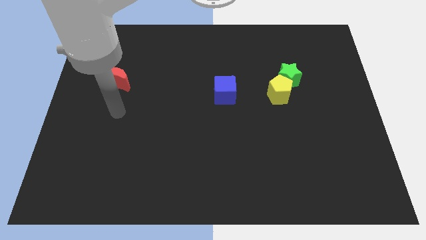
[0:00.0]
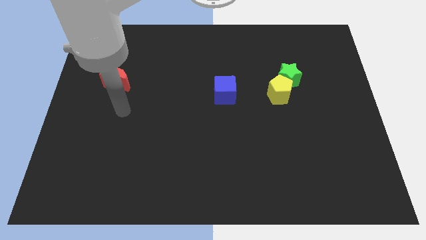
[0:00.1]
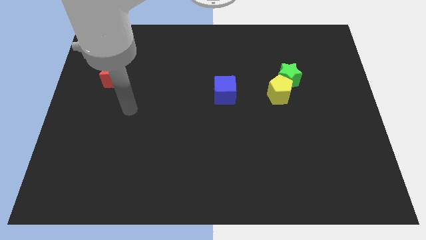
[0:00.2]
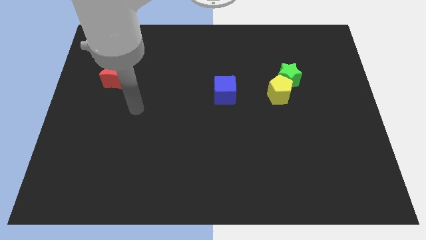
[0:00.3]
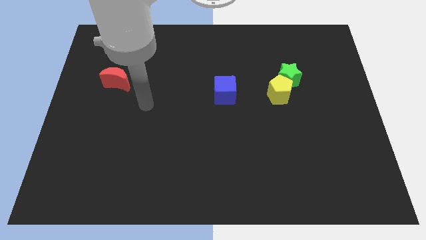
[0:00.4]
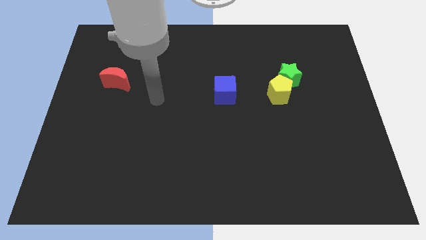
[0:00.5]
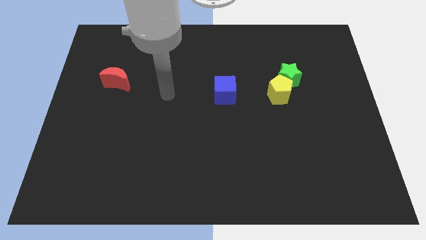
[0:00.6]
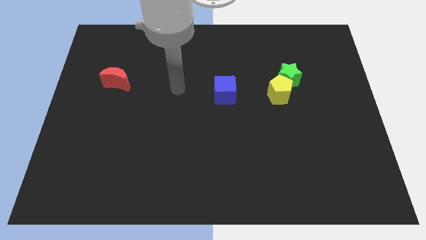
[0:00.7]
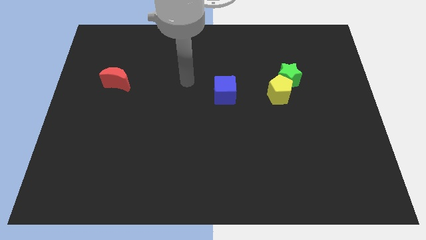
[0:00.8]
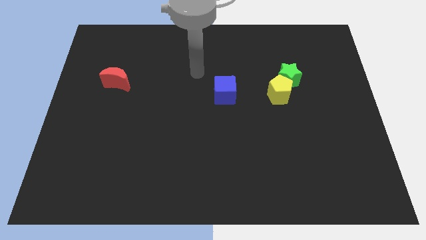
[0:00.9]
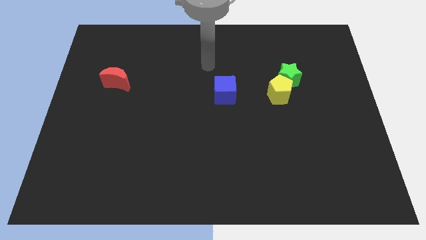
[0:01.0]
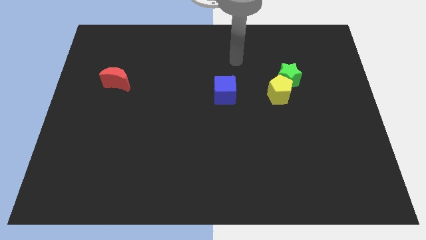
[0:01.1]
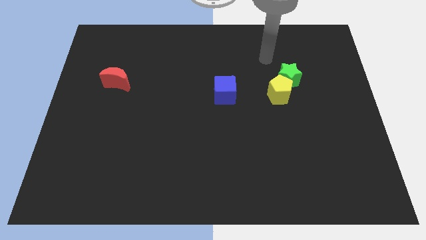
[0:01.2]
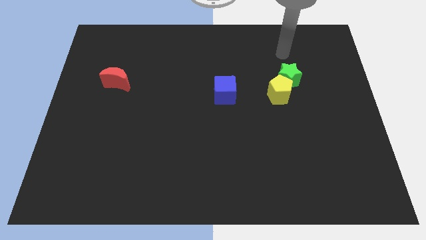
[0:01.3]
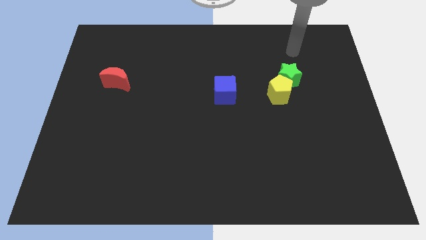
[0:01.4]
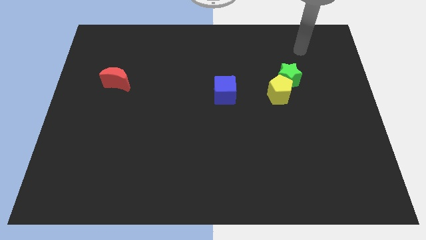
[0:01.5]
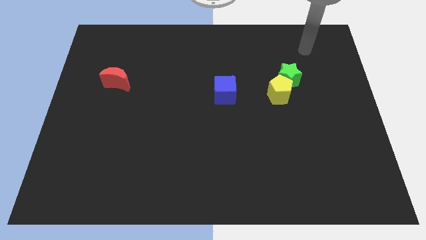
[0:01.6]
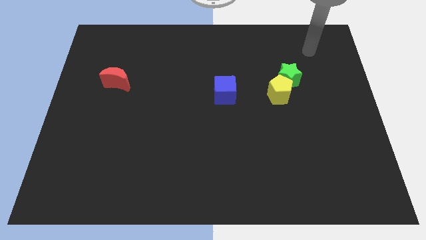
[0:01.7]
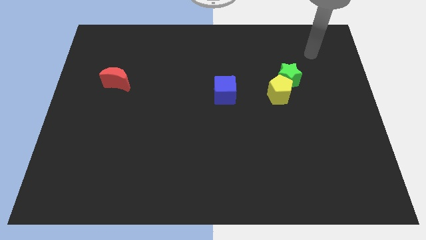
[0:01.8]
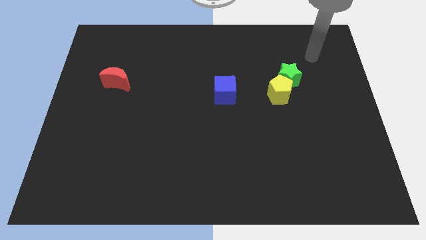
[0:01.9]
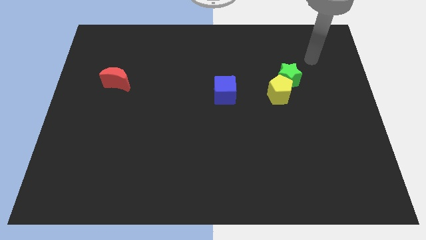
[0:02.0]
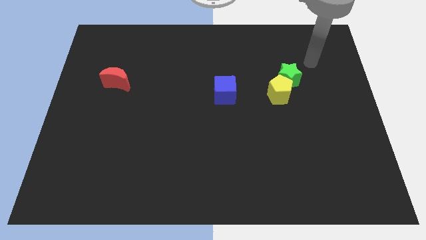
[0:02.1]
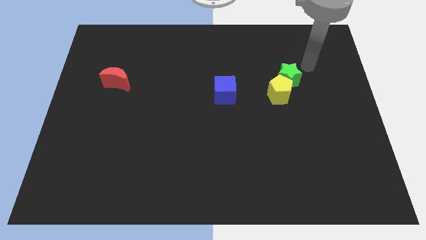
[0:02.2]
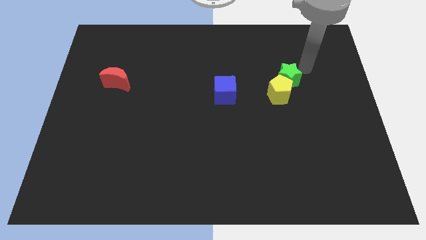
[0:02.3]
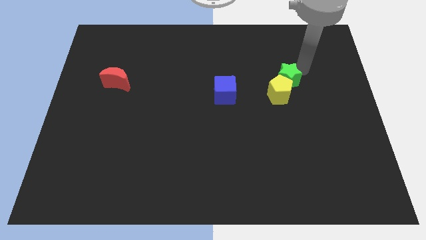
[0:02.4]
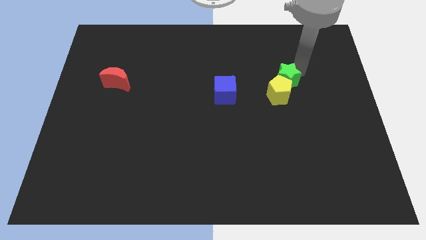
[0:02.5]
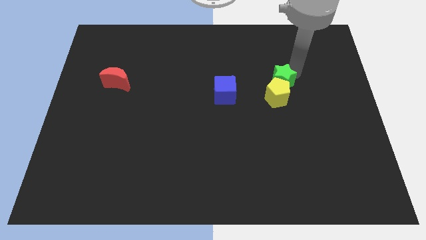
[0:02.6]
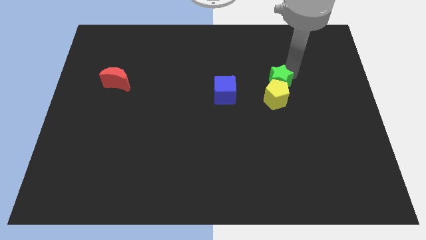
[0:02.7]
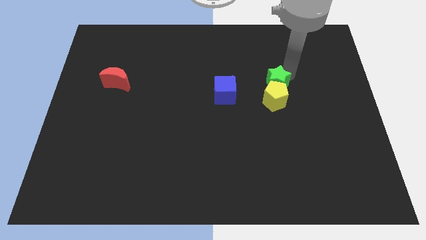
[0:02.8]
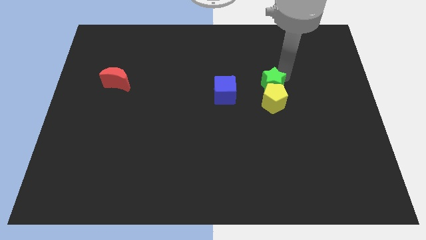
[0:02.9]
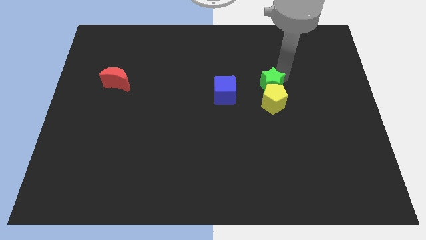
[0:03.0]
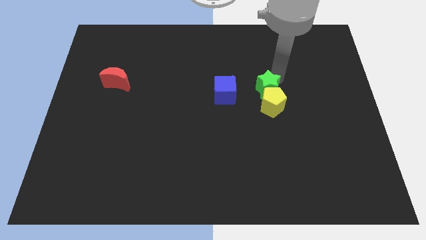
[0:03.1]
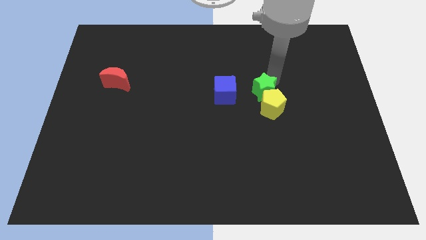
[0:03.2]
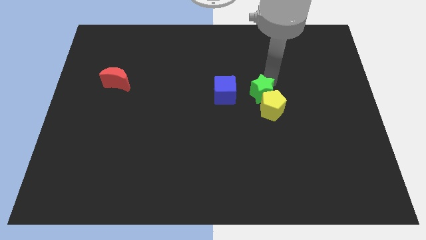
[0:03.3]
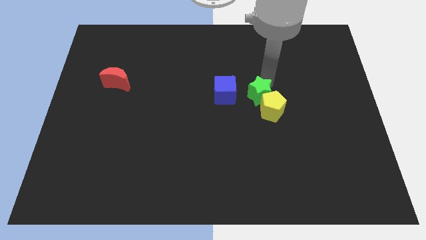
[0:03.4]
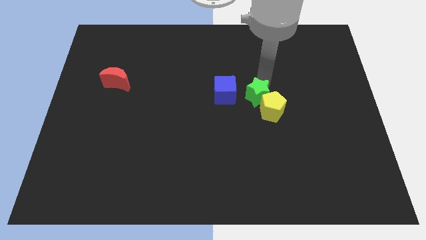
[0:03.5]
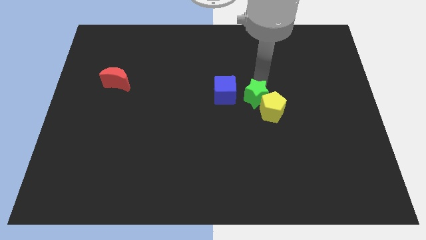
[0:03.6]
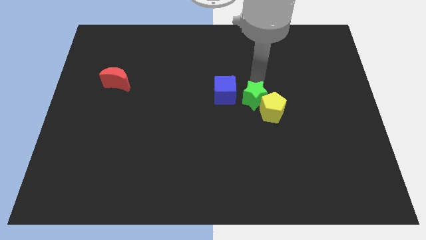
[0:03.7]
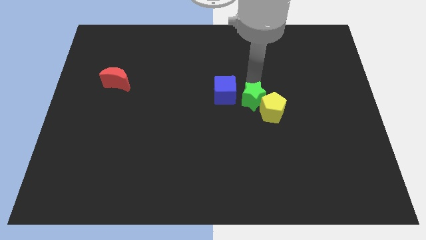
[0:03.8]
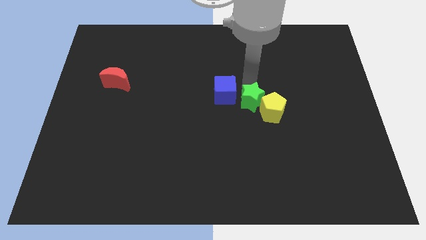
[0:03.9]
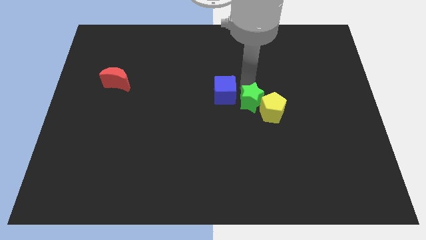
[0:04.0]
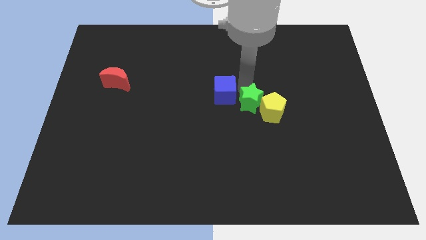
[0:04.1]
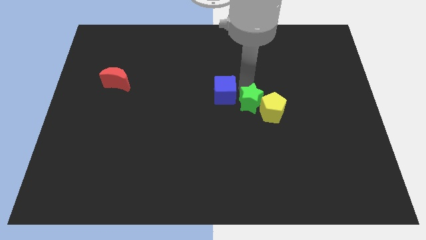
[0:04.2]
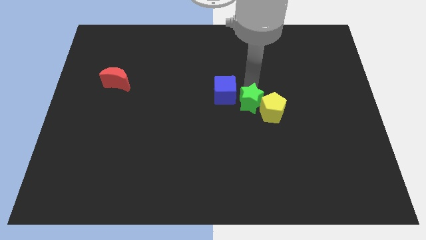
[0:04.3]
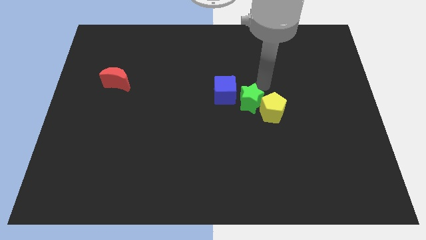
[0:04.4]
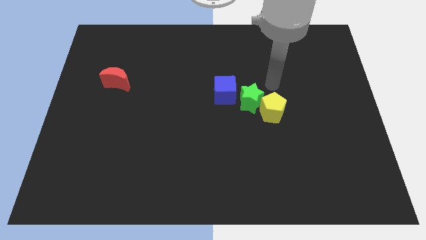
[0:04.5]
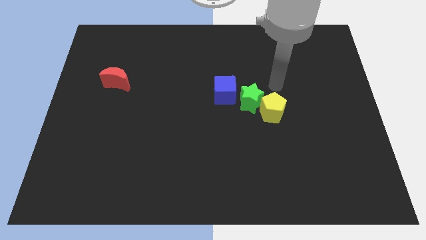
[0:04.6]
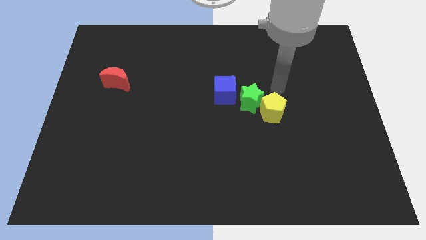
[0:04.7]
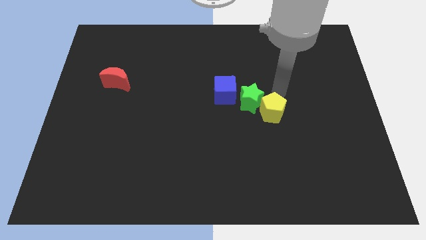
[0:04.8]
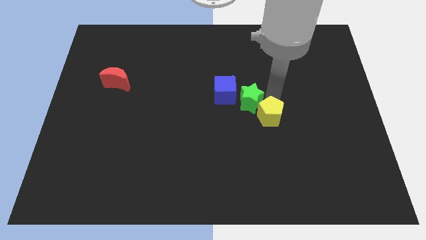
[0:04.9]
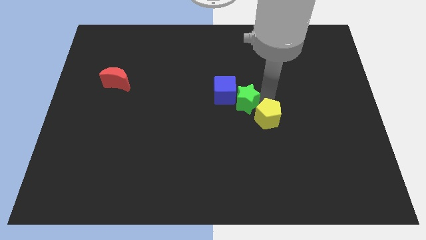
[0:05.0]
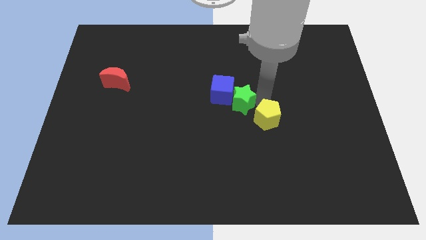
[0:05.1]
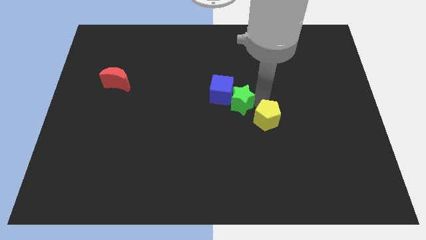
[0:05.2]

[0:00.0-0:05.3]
slide the star close to the blue block

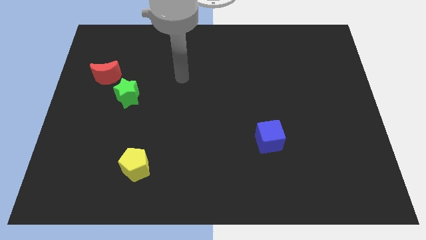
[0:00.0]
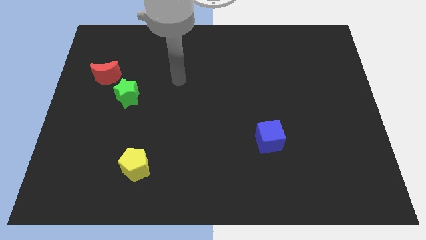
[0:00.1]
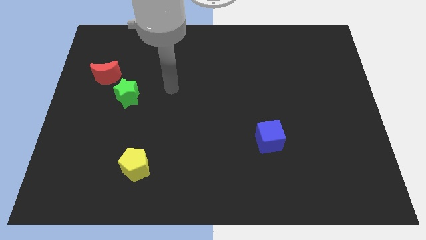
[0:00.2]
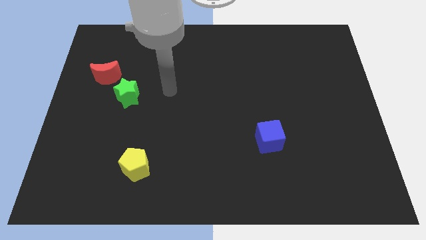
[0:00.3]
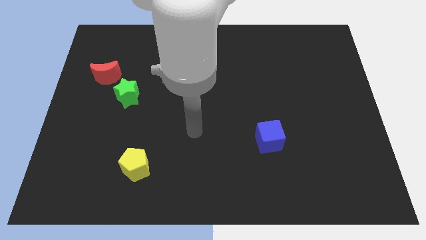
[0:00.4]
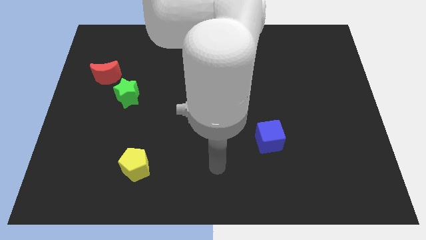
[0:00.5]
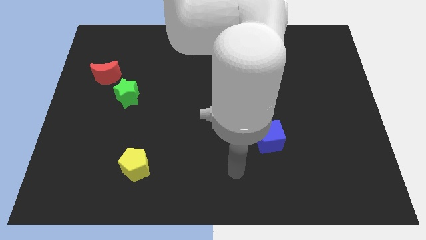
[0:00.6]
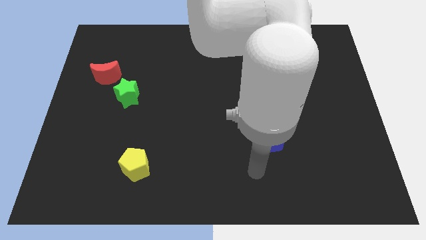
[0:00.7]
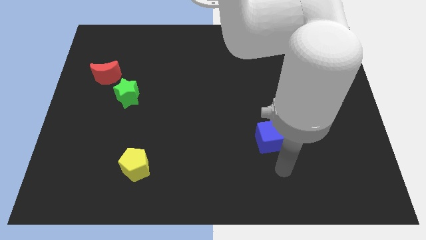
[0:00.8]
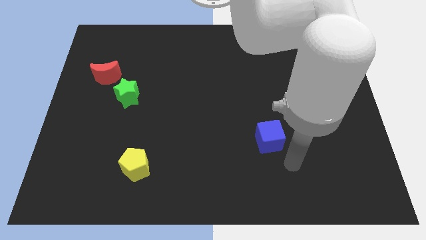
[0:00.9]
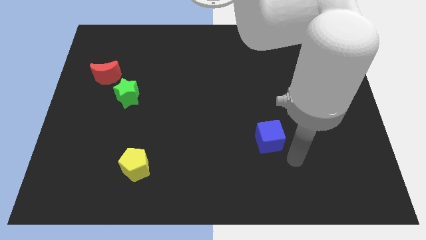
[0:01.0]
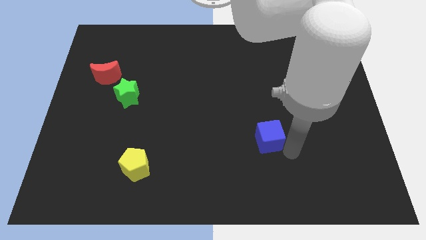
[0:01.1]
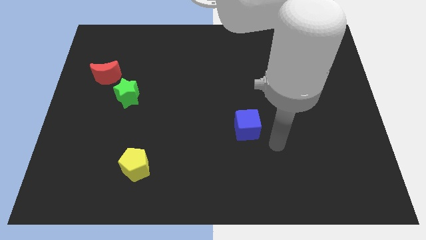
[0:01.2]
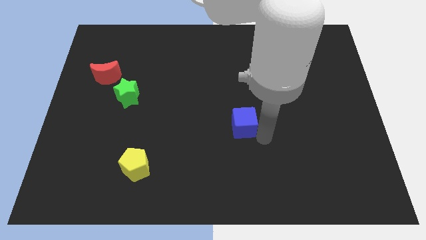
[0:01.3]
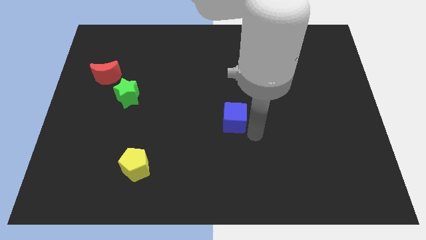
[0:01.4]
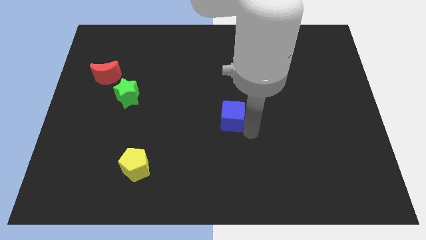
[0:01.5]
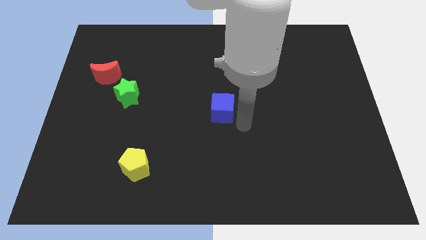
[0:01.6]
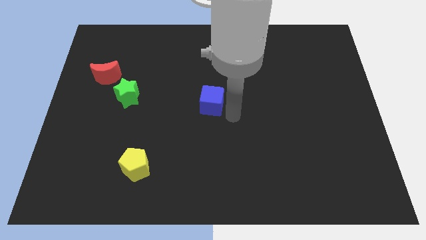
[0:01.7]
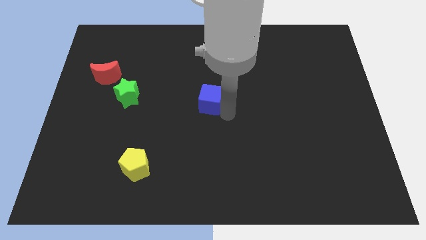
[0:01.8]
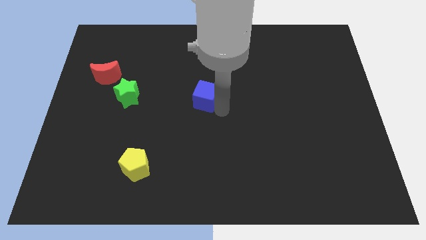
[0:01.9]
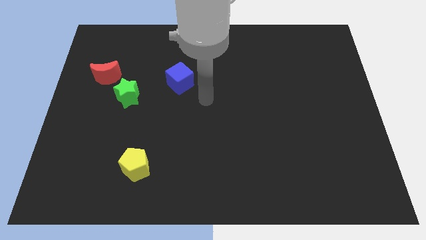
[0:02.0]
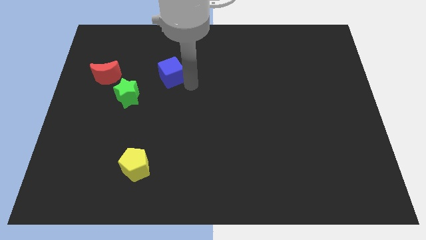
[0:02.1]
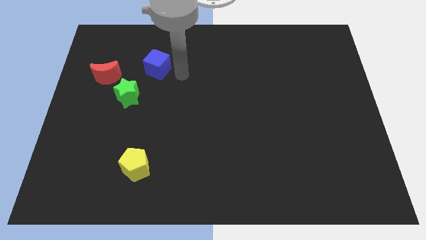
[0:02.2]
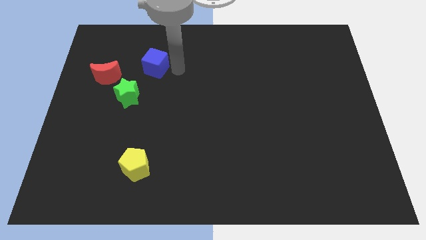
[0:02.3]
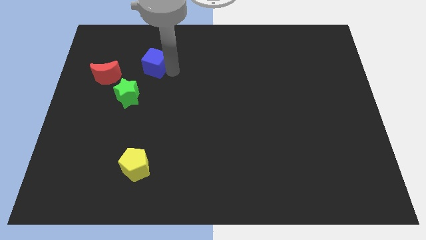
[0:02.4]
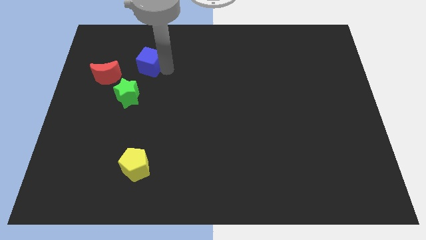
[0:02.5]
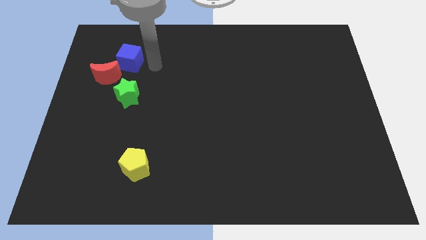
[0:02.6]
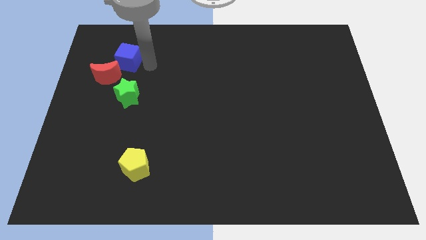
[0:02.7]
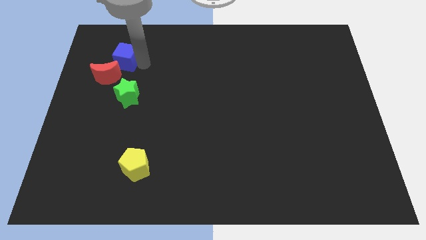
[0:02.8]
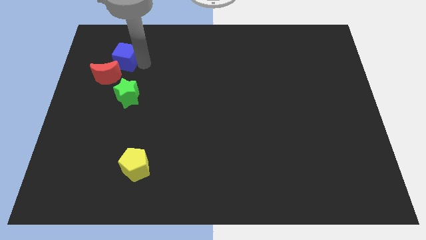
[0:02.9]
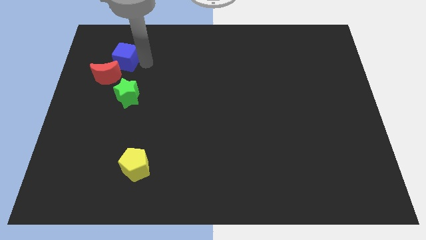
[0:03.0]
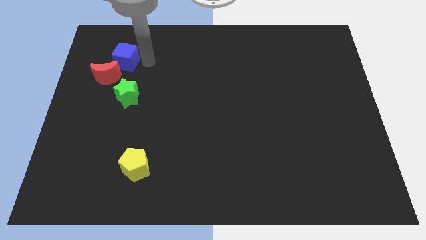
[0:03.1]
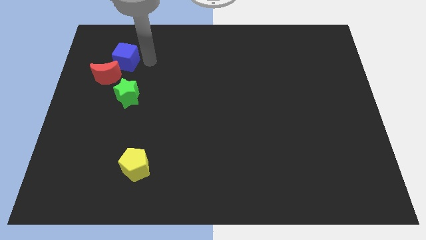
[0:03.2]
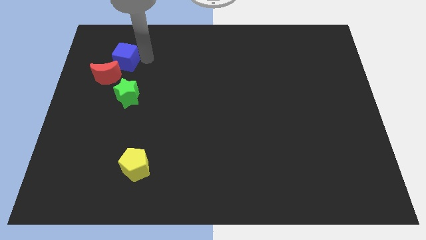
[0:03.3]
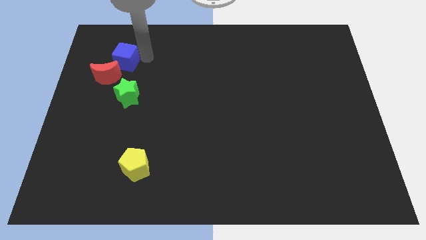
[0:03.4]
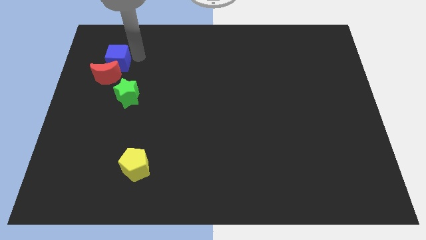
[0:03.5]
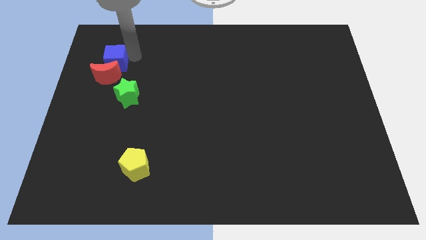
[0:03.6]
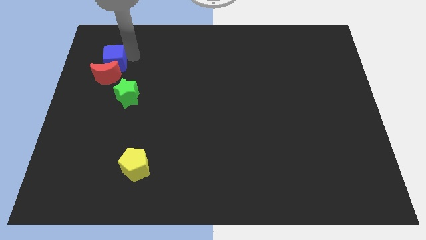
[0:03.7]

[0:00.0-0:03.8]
slide the cube towards the red block
